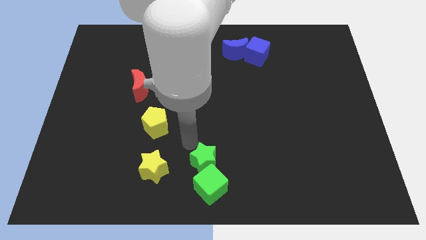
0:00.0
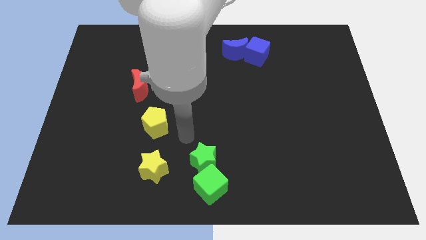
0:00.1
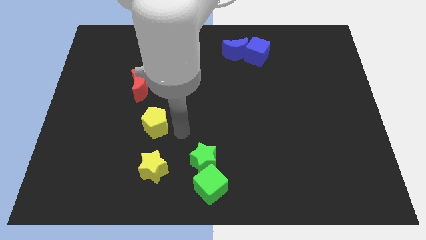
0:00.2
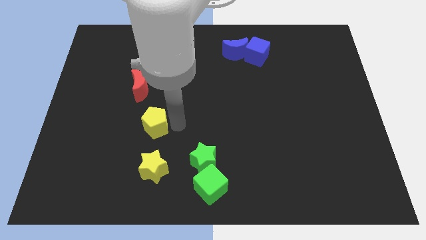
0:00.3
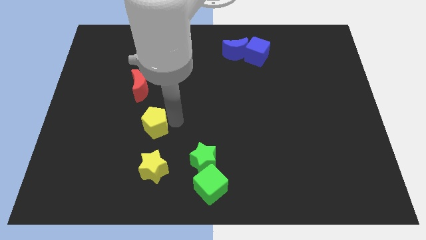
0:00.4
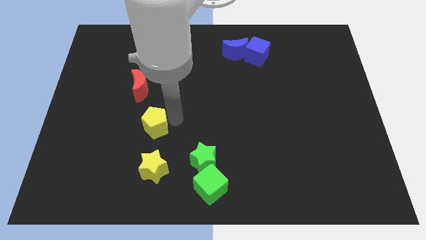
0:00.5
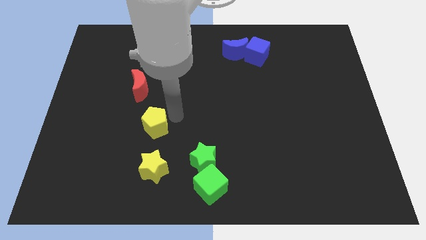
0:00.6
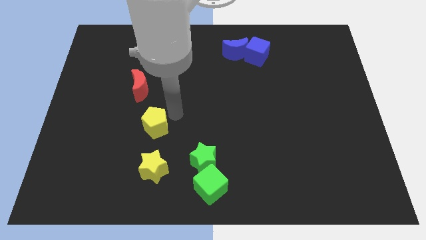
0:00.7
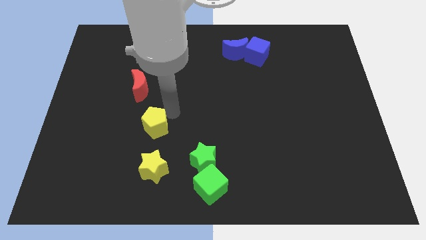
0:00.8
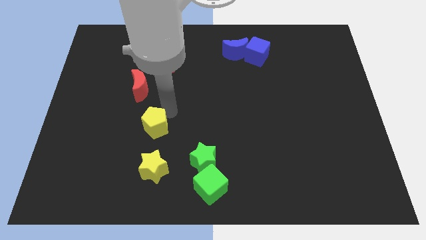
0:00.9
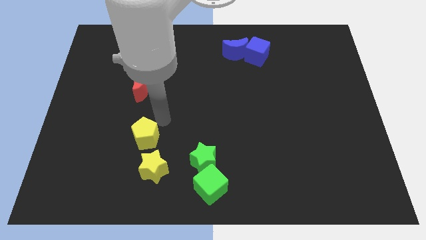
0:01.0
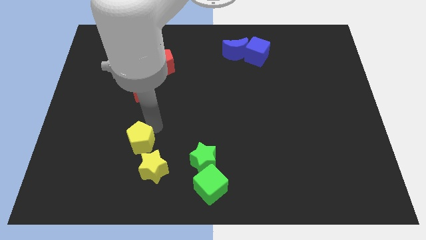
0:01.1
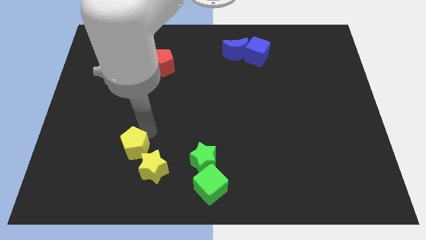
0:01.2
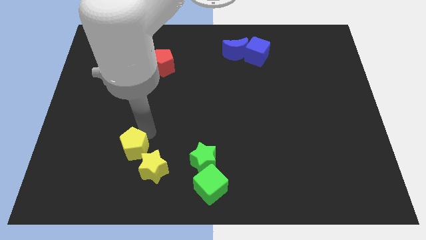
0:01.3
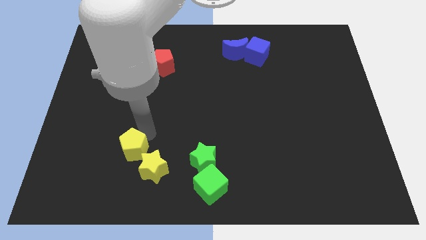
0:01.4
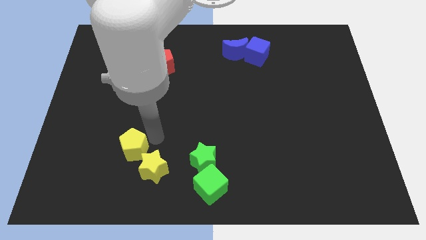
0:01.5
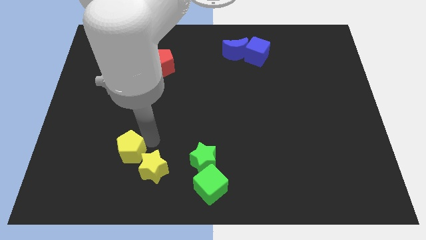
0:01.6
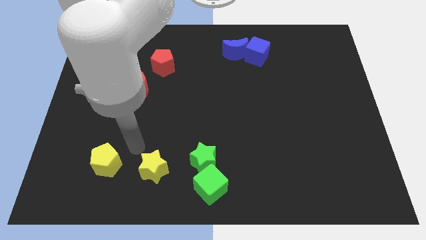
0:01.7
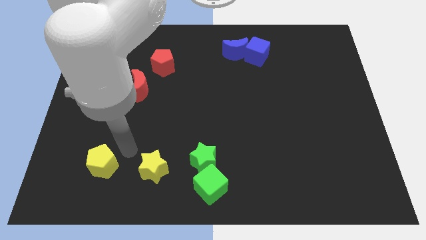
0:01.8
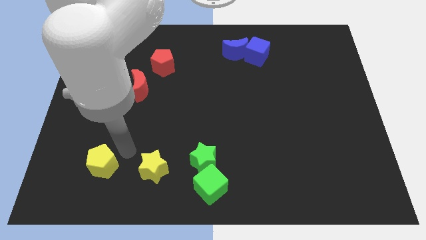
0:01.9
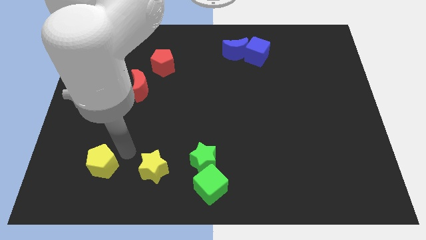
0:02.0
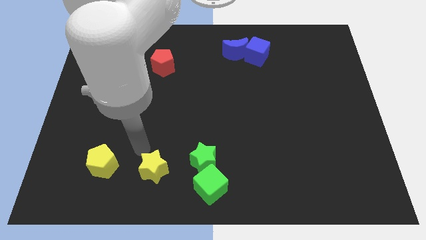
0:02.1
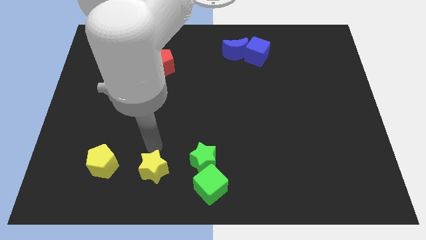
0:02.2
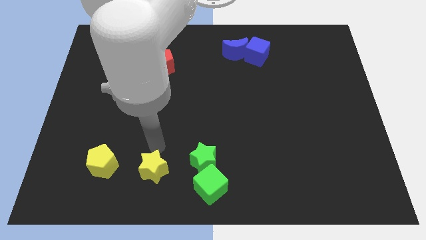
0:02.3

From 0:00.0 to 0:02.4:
push yellow pentagon left to the yellow star

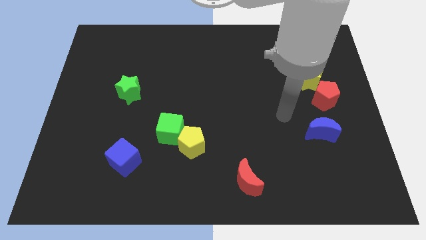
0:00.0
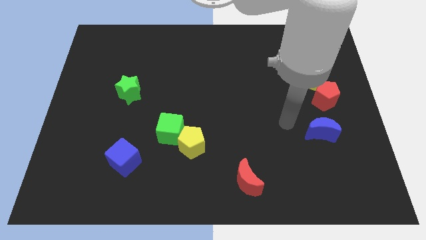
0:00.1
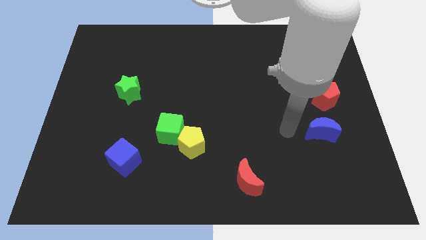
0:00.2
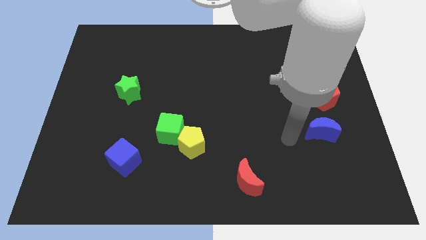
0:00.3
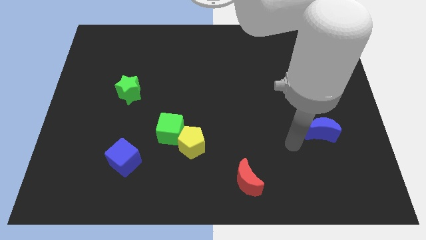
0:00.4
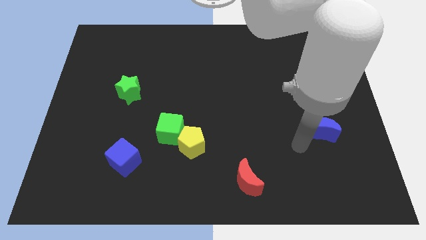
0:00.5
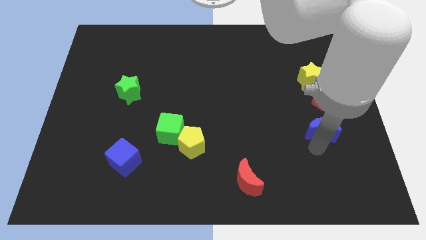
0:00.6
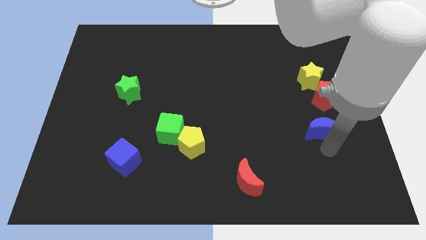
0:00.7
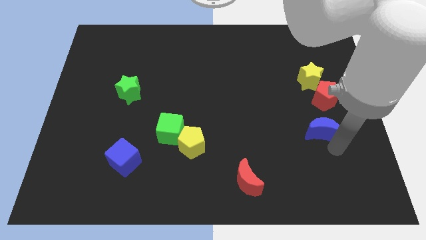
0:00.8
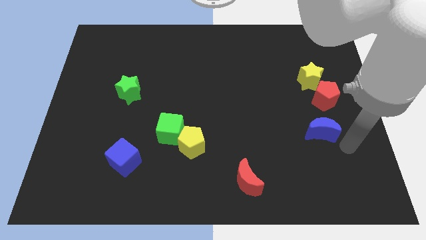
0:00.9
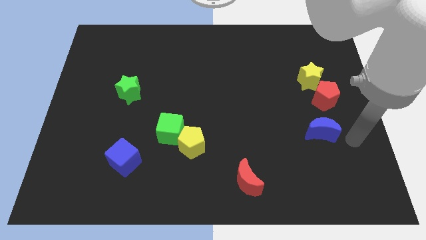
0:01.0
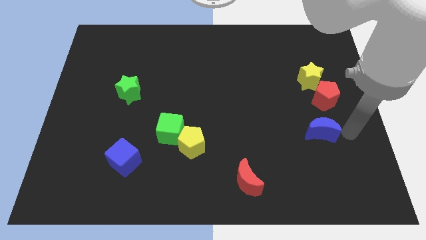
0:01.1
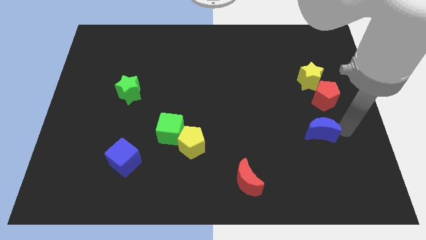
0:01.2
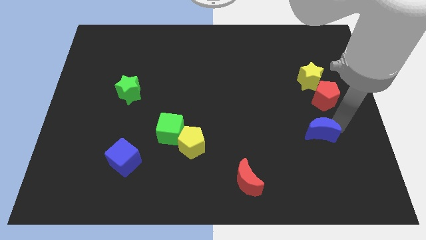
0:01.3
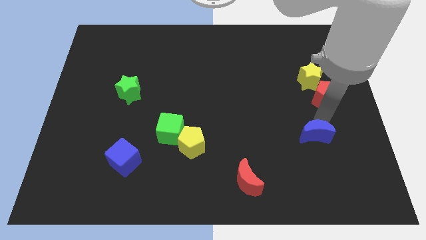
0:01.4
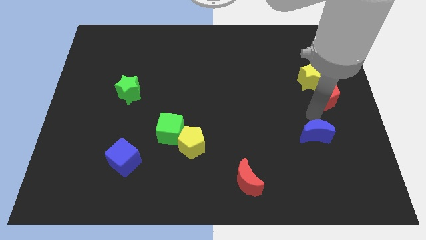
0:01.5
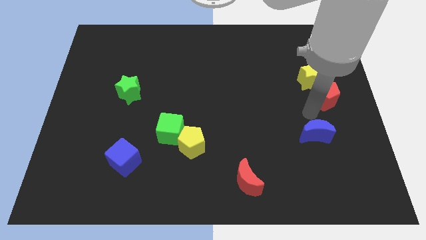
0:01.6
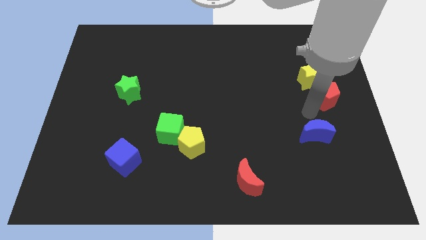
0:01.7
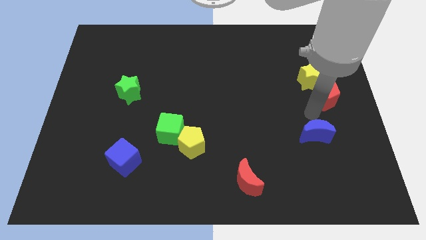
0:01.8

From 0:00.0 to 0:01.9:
move the arm to the top of blue crescent

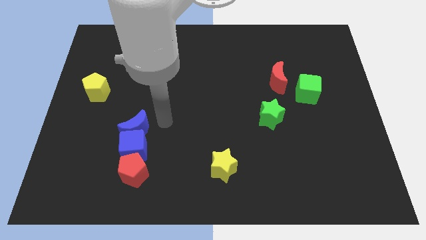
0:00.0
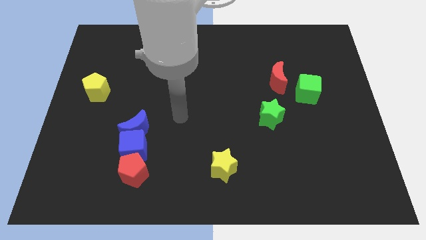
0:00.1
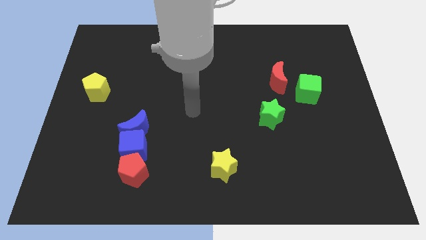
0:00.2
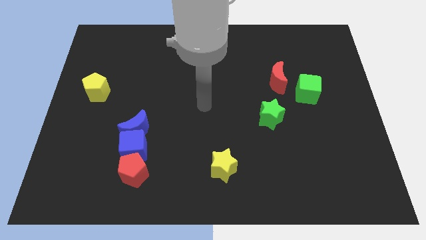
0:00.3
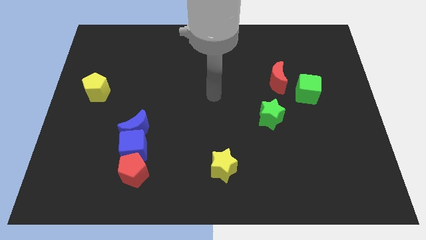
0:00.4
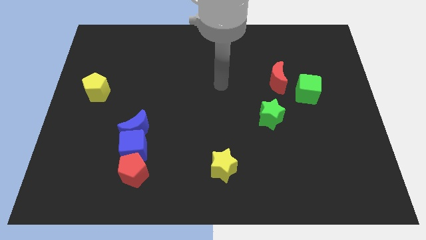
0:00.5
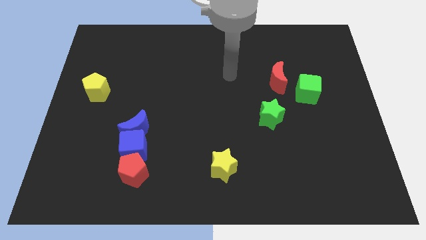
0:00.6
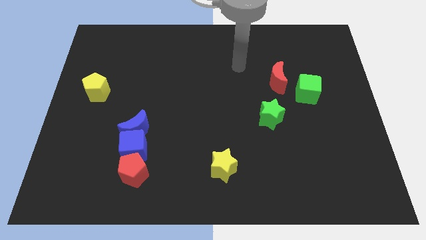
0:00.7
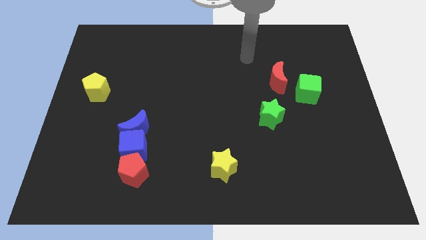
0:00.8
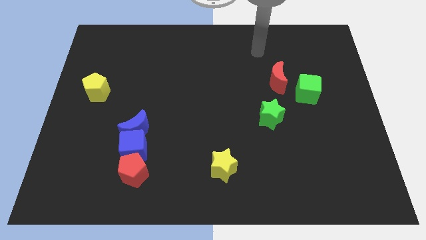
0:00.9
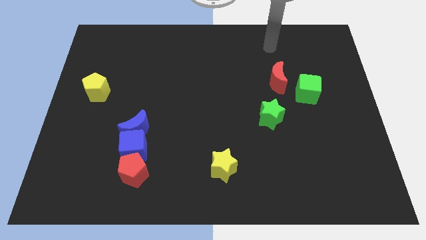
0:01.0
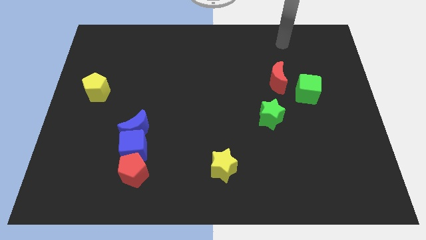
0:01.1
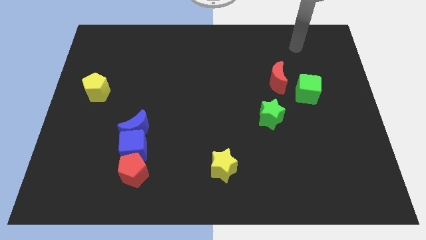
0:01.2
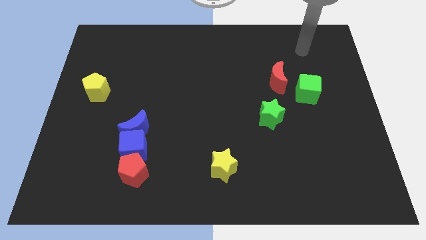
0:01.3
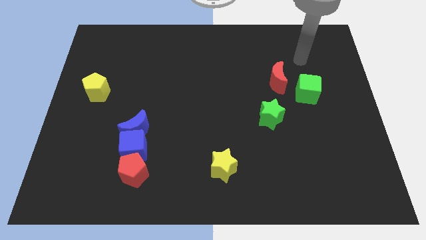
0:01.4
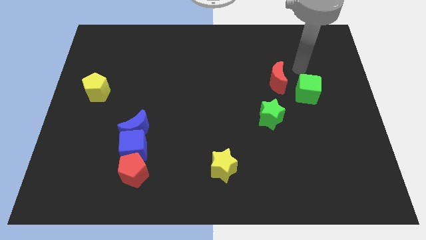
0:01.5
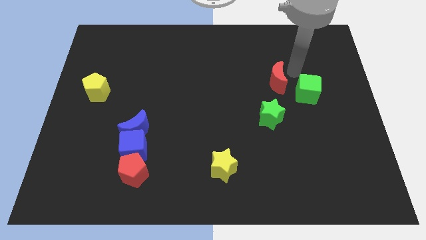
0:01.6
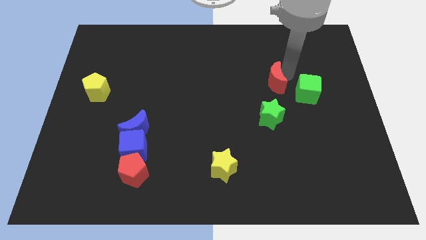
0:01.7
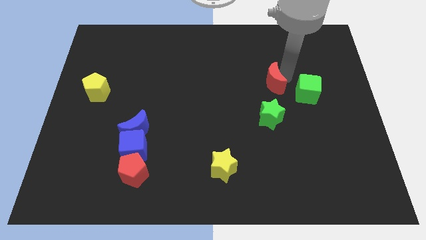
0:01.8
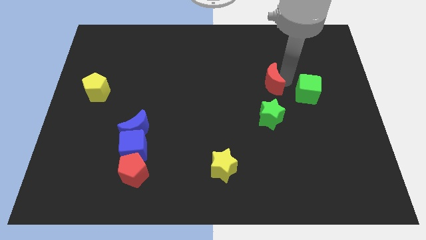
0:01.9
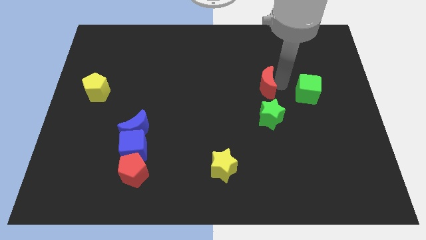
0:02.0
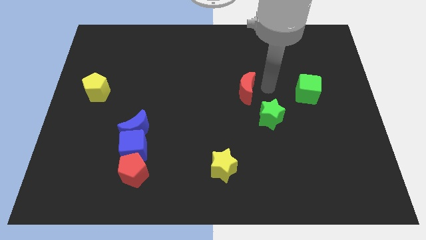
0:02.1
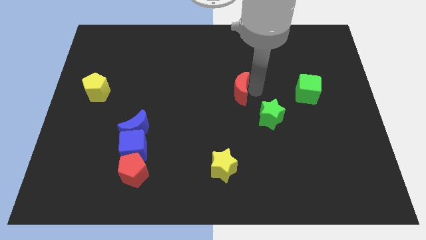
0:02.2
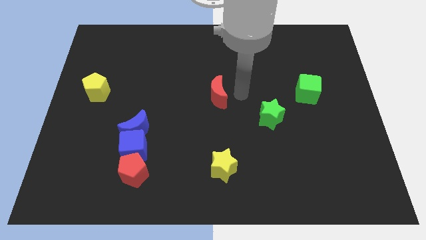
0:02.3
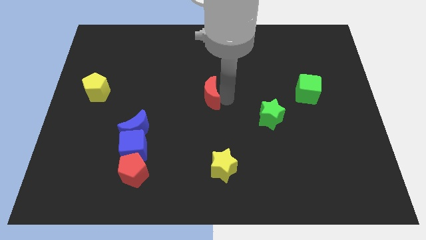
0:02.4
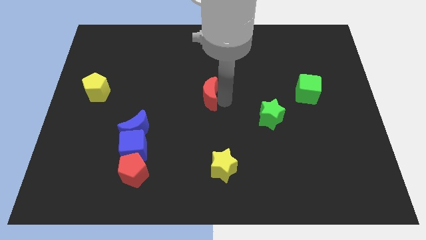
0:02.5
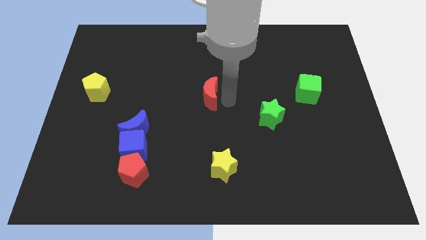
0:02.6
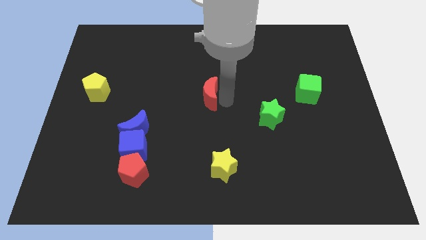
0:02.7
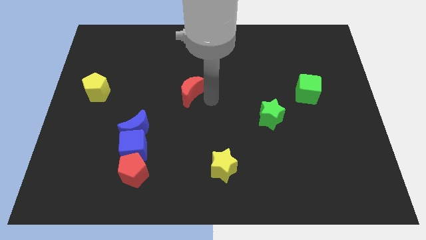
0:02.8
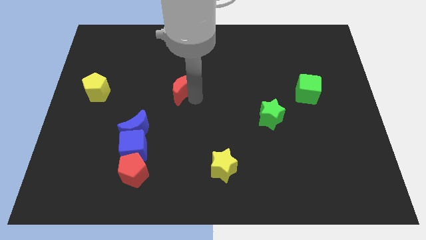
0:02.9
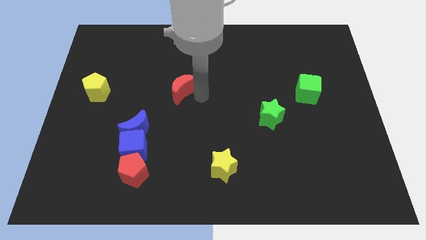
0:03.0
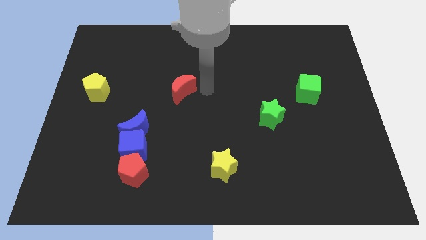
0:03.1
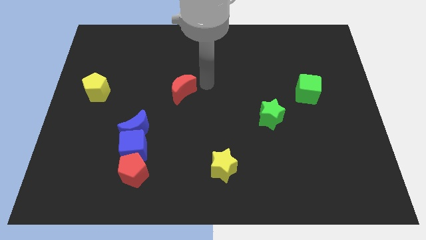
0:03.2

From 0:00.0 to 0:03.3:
slide the red moon towards the blue moon

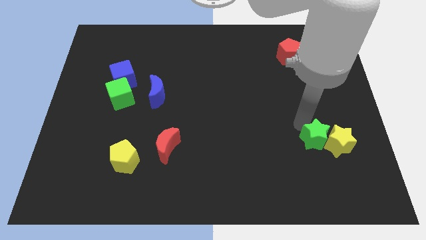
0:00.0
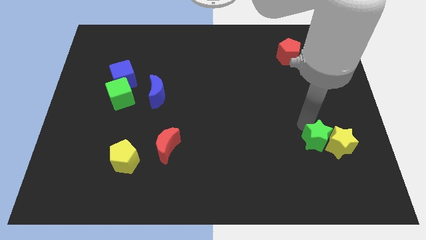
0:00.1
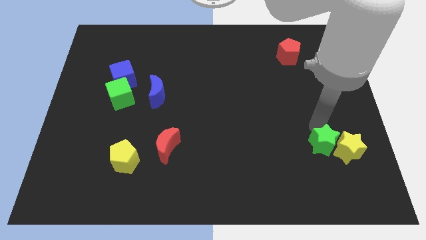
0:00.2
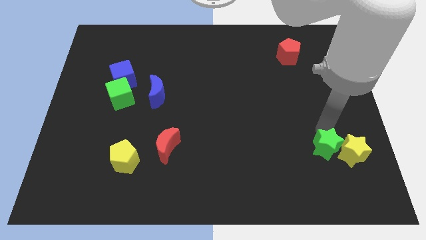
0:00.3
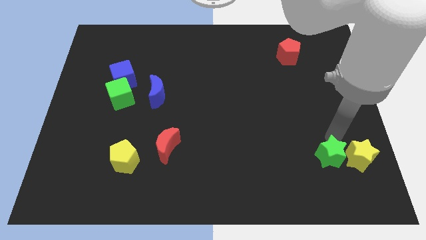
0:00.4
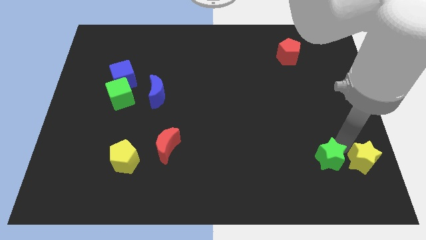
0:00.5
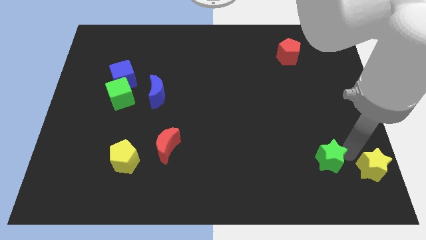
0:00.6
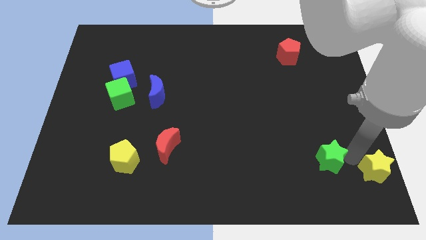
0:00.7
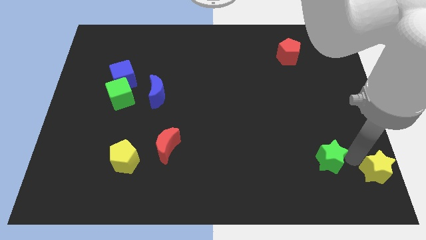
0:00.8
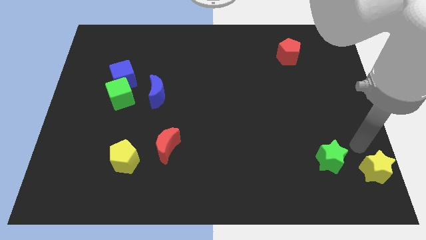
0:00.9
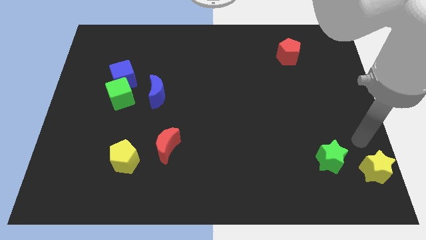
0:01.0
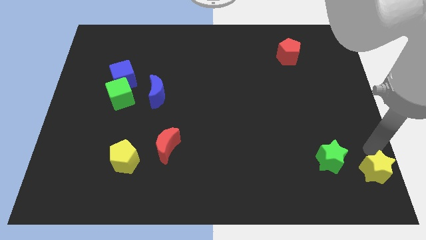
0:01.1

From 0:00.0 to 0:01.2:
separate the green star and the yellow star
